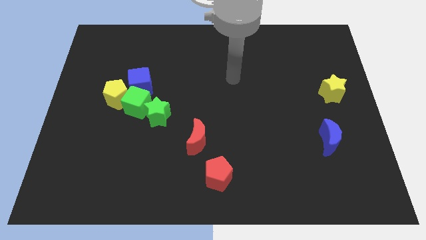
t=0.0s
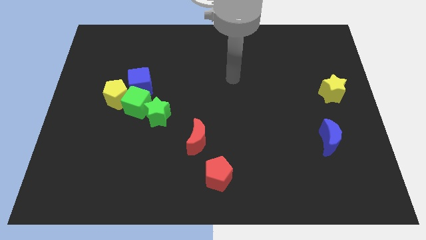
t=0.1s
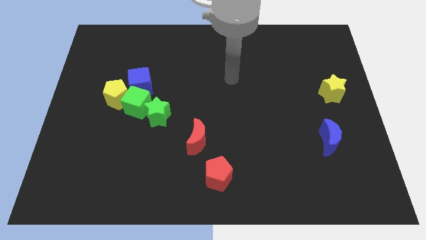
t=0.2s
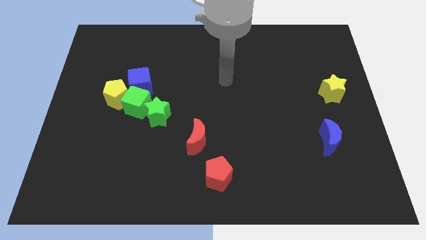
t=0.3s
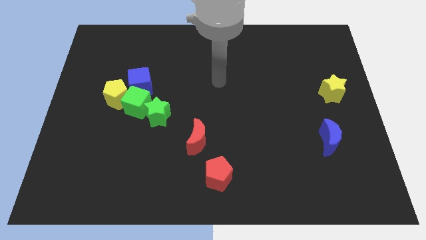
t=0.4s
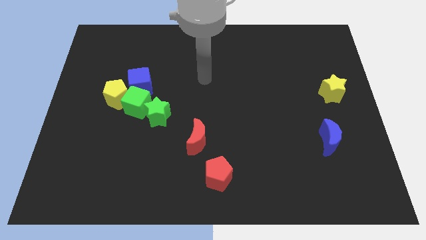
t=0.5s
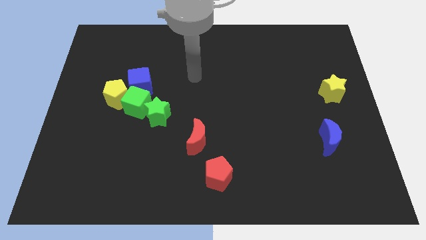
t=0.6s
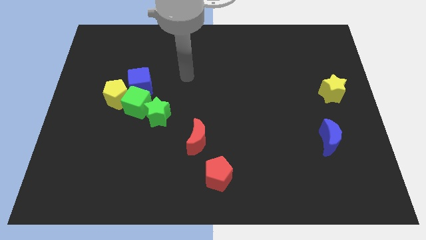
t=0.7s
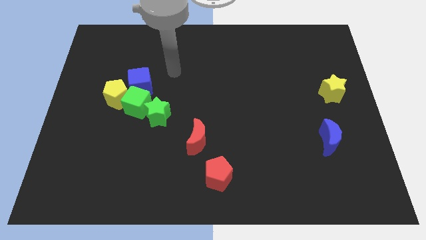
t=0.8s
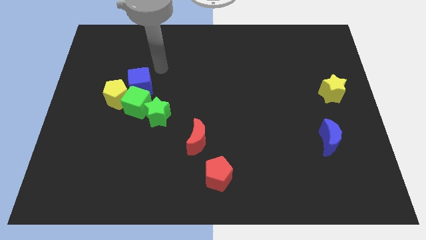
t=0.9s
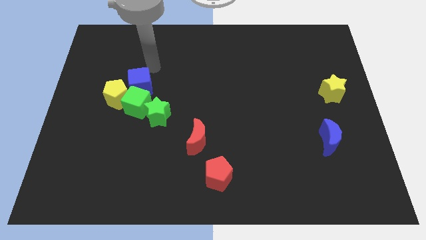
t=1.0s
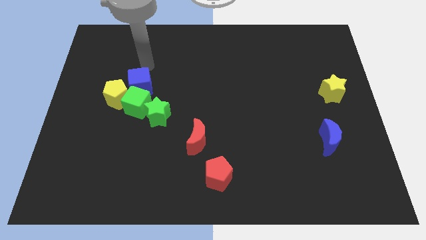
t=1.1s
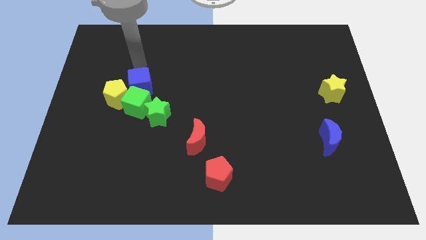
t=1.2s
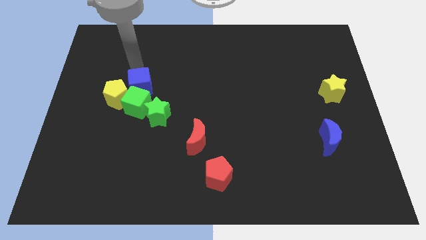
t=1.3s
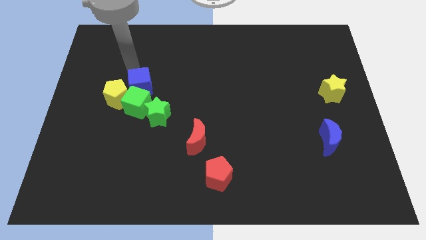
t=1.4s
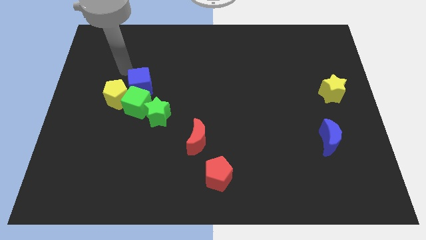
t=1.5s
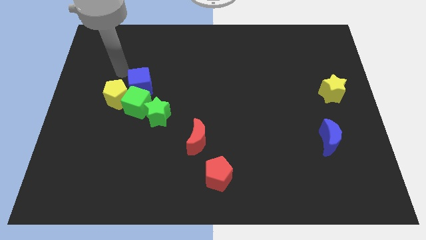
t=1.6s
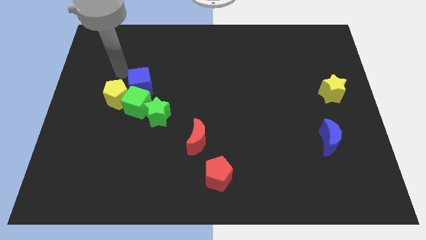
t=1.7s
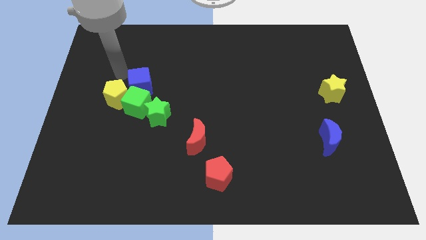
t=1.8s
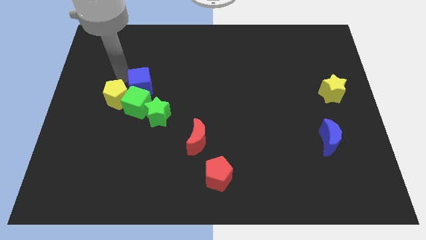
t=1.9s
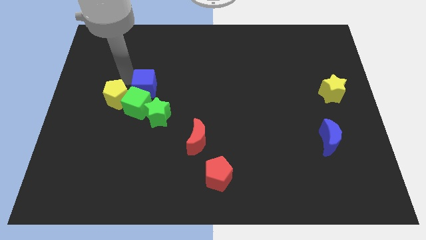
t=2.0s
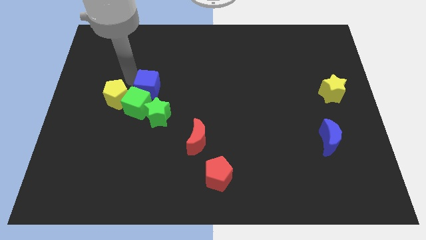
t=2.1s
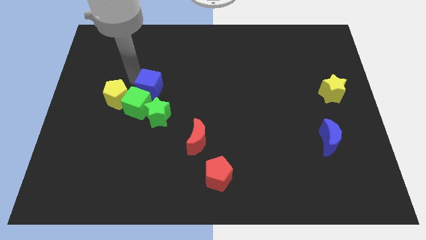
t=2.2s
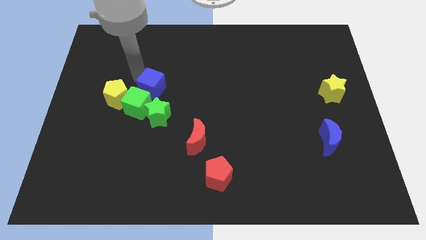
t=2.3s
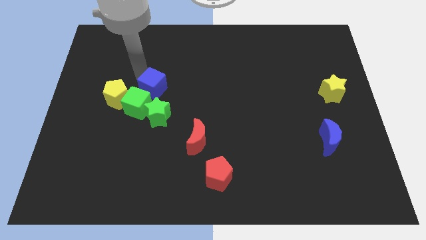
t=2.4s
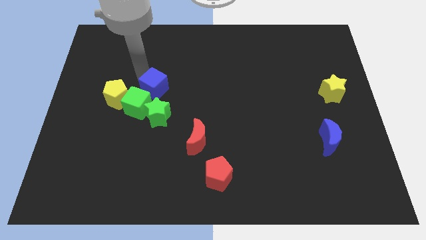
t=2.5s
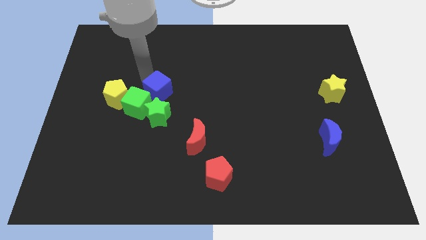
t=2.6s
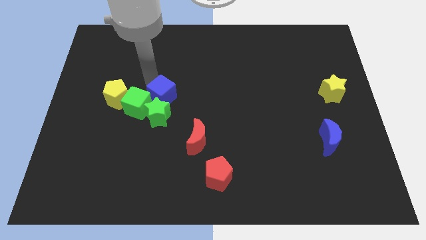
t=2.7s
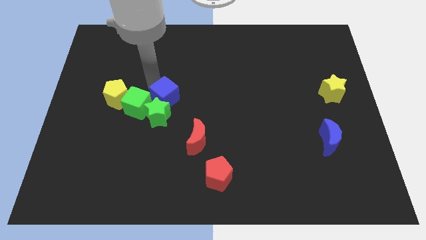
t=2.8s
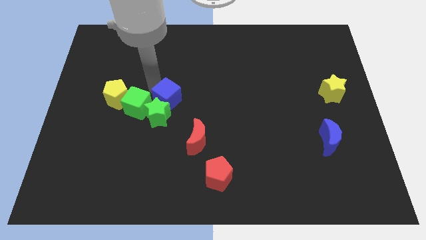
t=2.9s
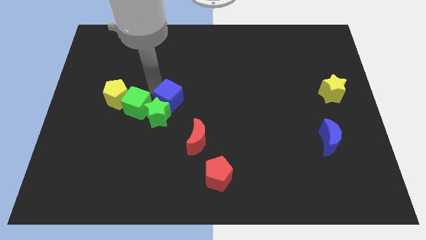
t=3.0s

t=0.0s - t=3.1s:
place blue cube to the top of green star

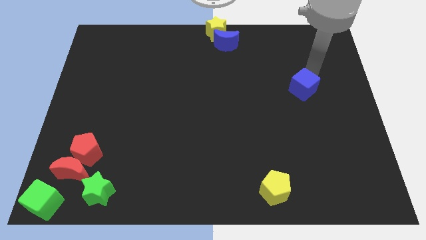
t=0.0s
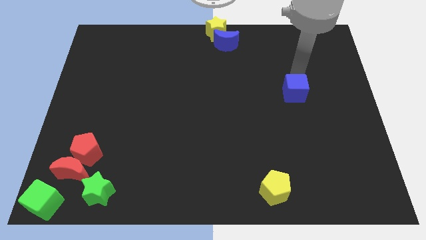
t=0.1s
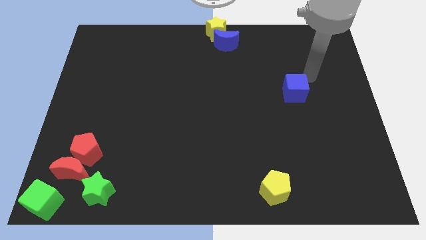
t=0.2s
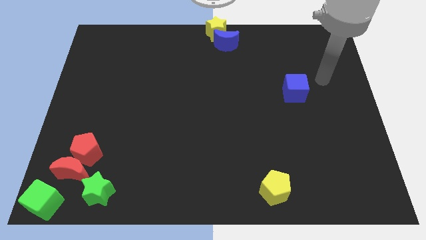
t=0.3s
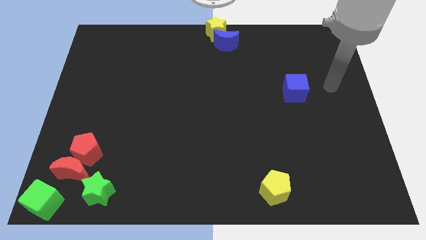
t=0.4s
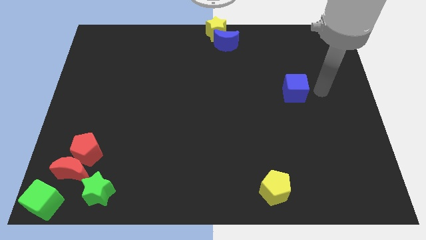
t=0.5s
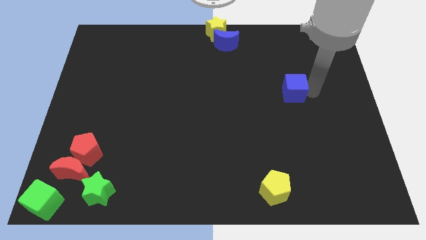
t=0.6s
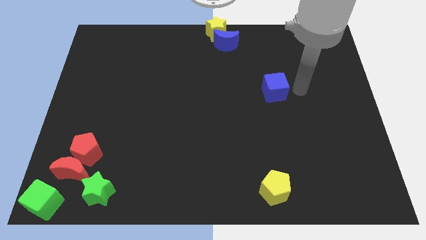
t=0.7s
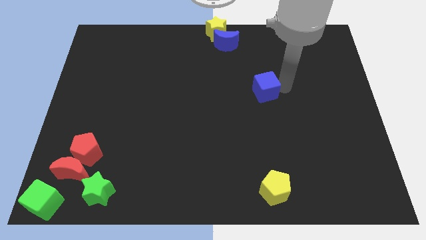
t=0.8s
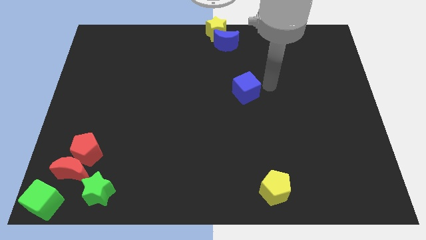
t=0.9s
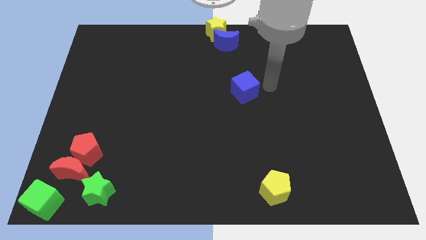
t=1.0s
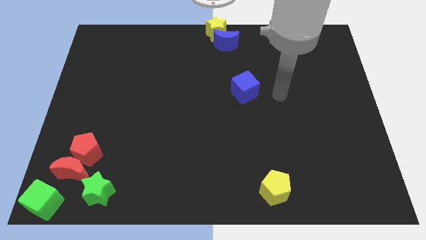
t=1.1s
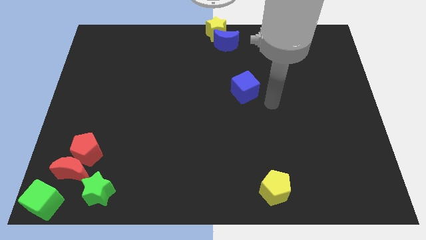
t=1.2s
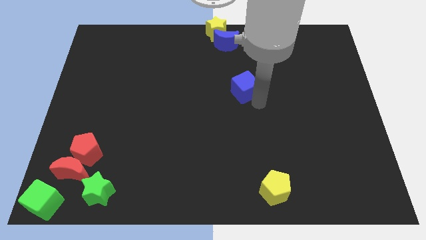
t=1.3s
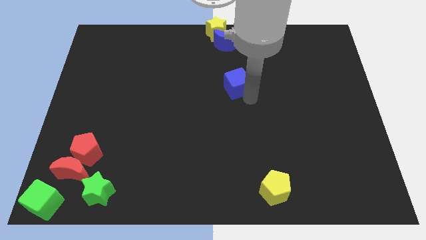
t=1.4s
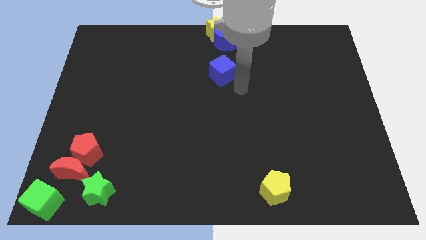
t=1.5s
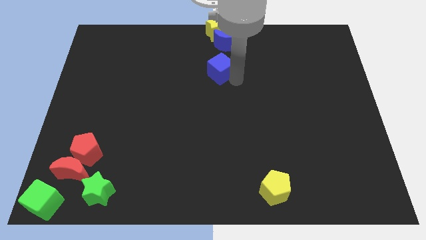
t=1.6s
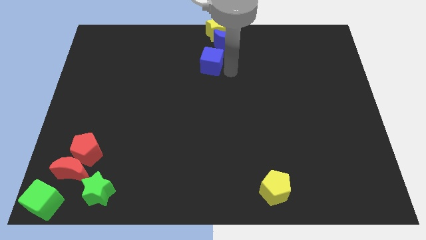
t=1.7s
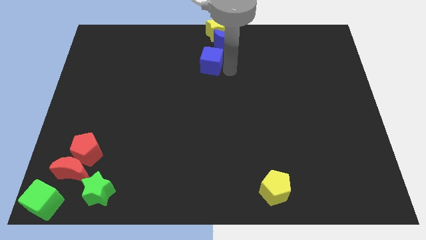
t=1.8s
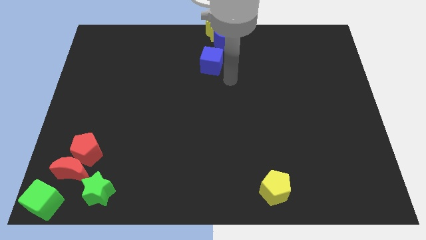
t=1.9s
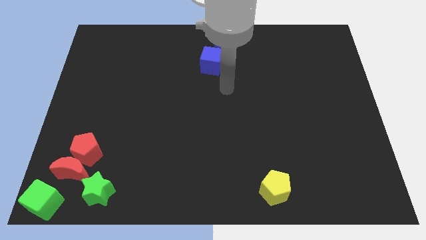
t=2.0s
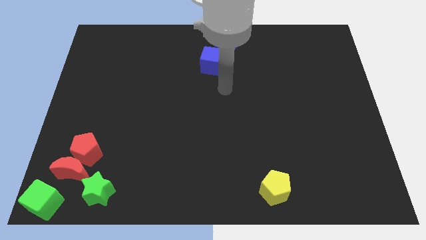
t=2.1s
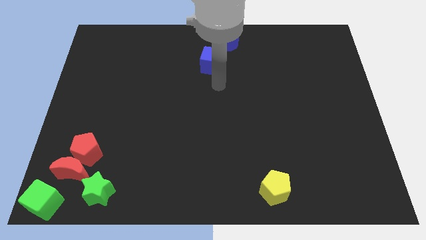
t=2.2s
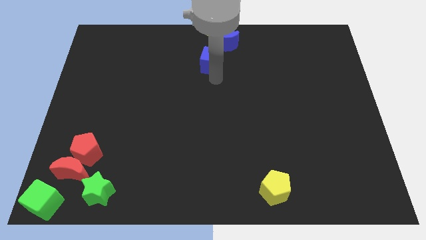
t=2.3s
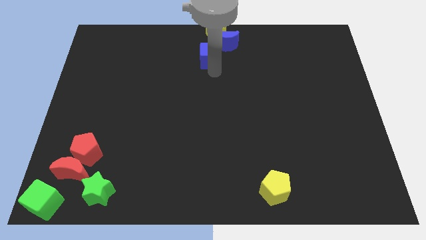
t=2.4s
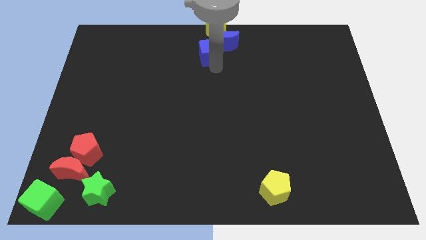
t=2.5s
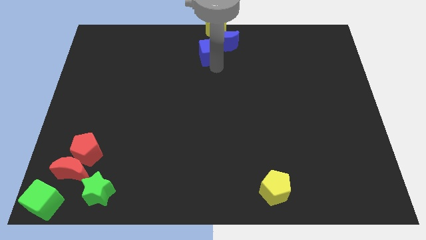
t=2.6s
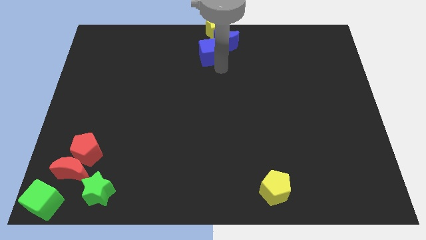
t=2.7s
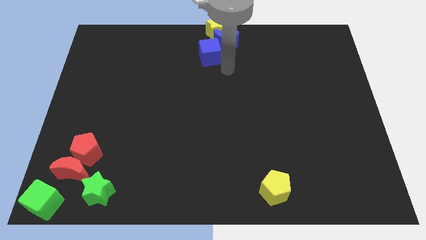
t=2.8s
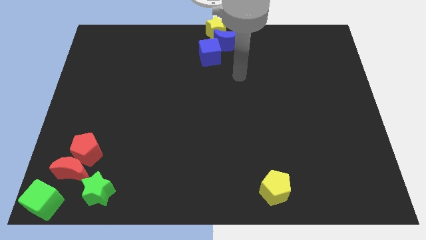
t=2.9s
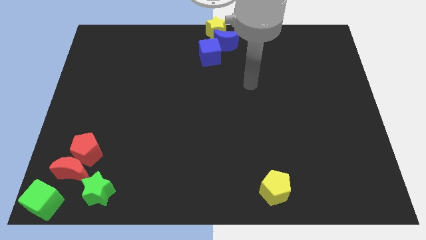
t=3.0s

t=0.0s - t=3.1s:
move blue cube below blue moon

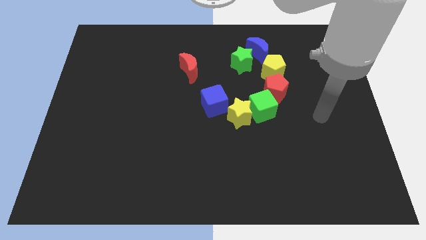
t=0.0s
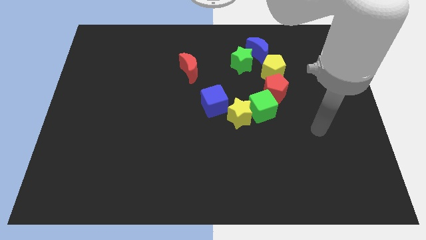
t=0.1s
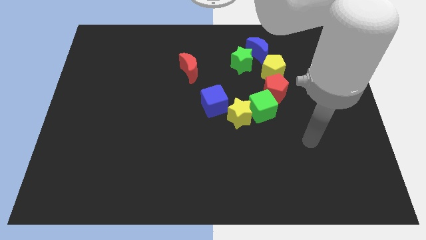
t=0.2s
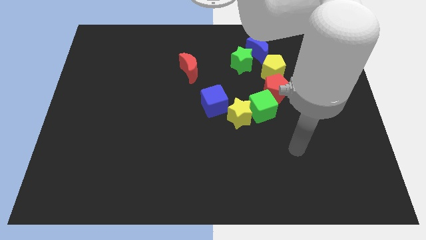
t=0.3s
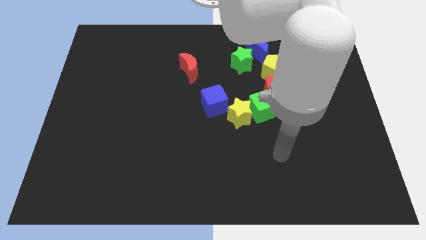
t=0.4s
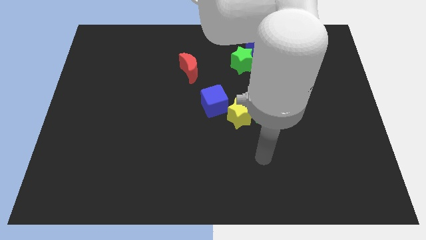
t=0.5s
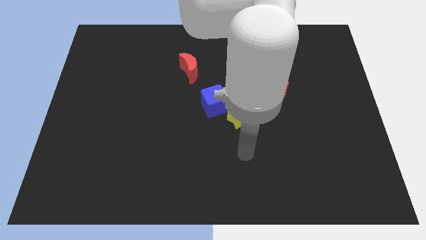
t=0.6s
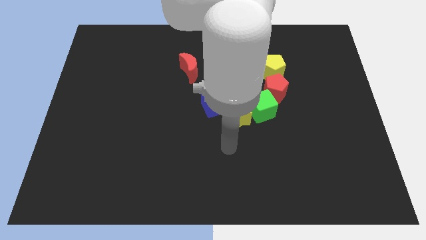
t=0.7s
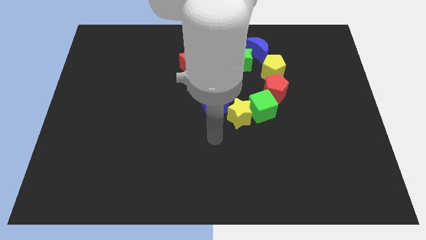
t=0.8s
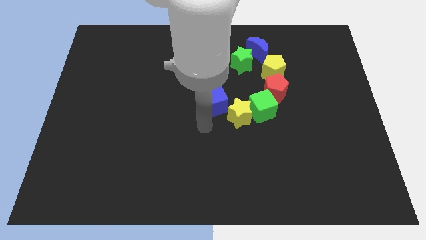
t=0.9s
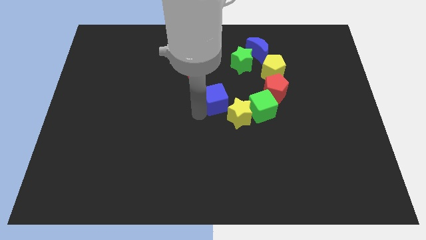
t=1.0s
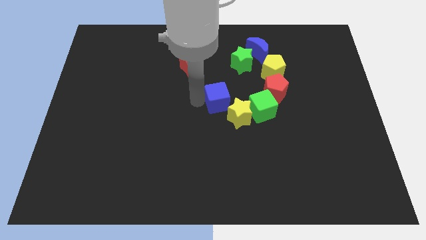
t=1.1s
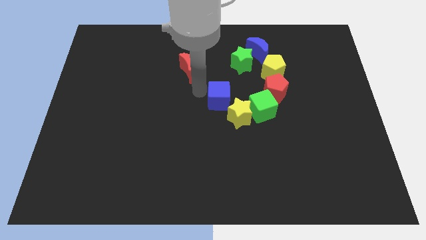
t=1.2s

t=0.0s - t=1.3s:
touch the blue cube on the left

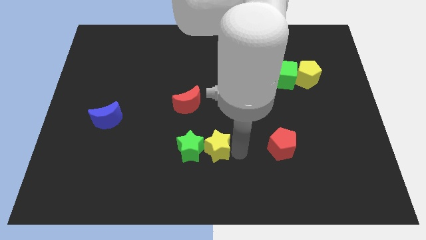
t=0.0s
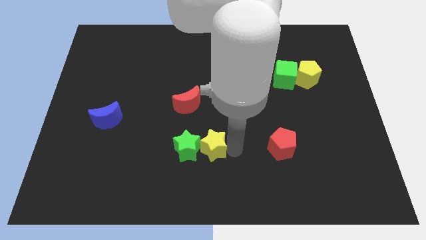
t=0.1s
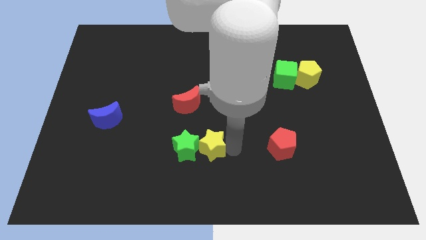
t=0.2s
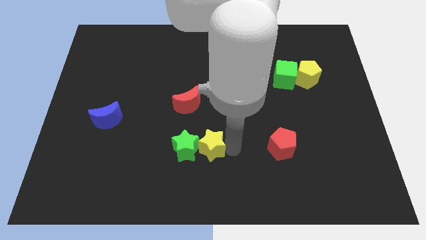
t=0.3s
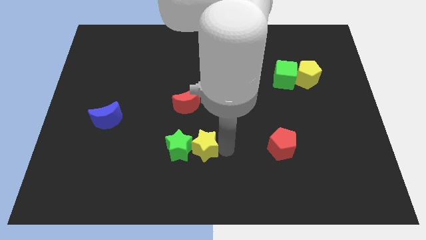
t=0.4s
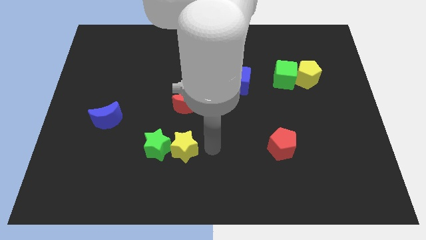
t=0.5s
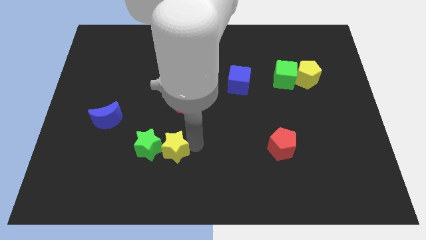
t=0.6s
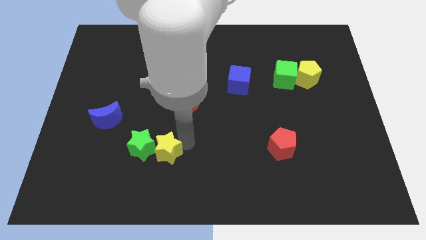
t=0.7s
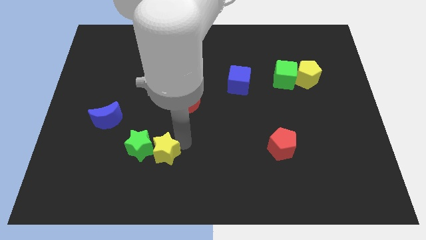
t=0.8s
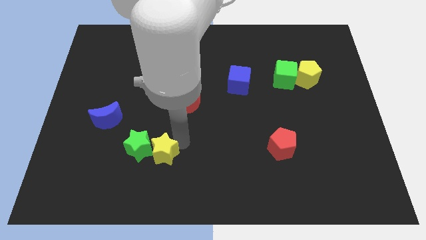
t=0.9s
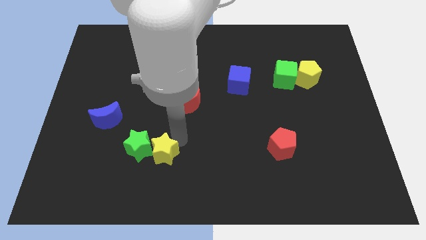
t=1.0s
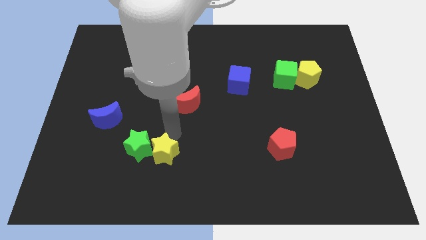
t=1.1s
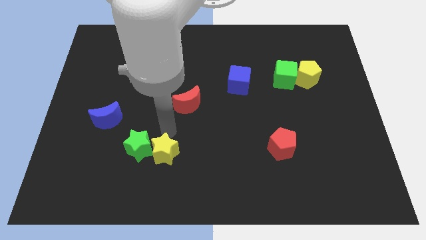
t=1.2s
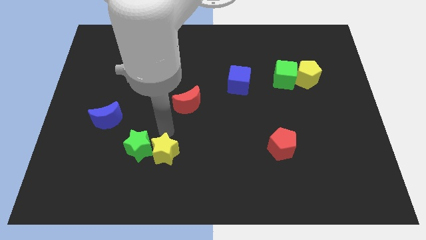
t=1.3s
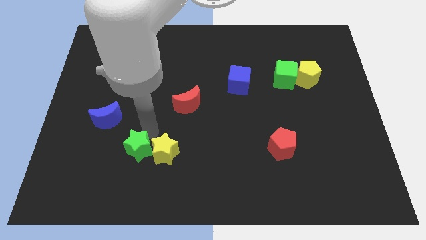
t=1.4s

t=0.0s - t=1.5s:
move green star and yellow star to left side
